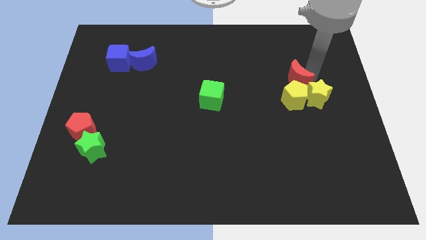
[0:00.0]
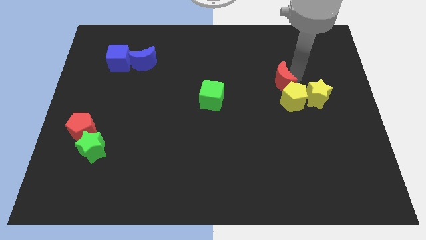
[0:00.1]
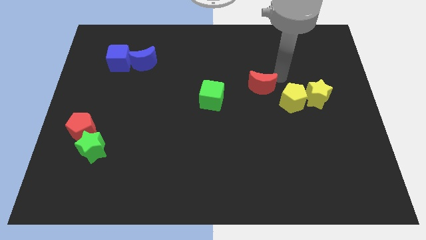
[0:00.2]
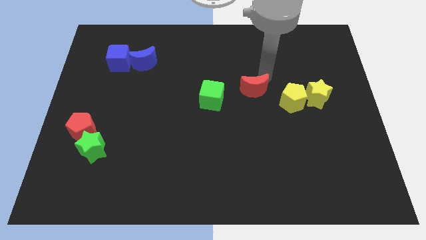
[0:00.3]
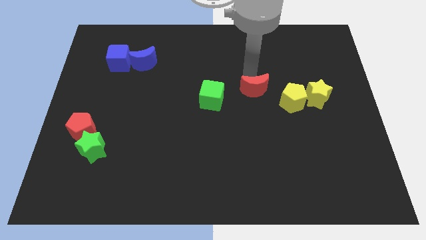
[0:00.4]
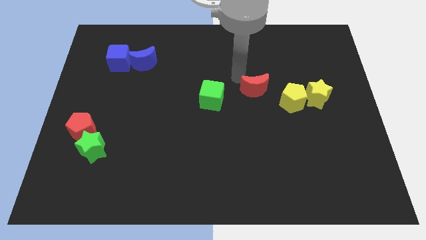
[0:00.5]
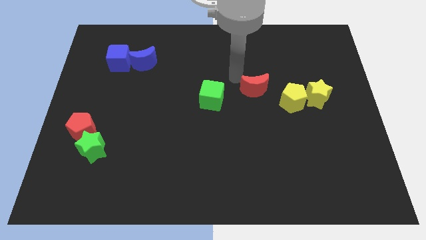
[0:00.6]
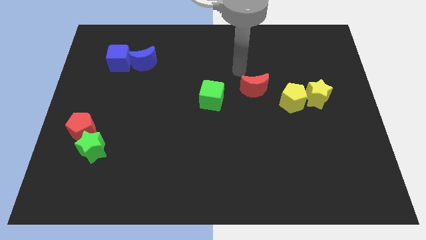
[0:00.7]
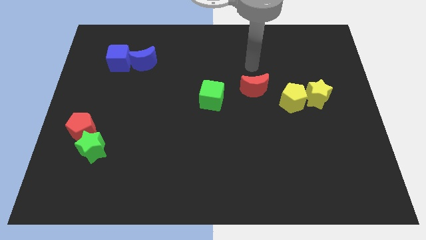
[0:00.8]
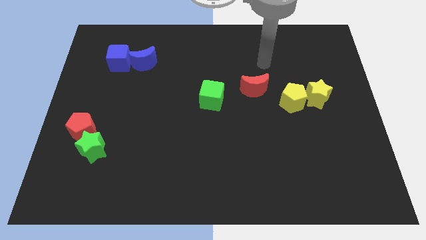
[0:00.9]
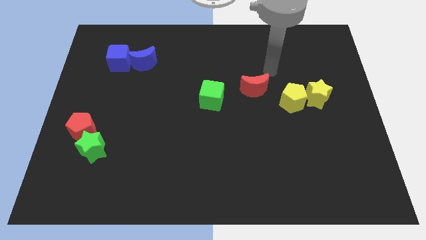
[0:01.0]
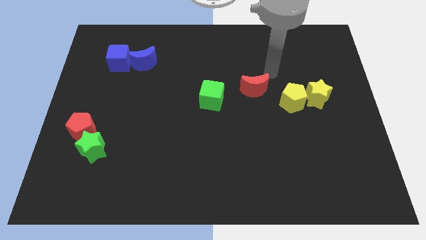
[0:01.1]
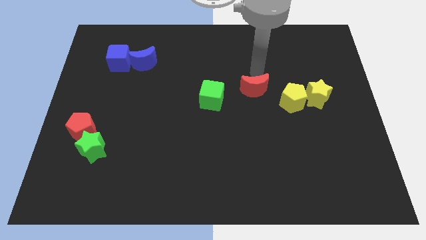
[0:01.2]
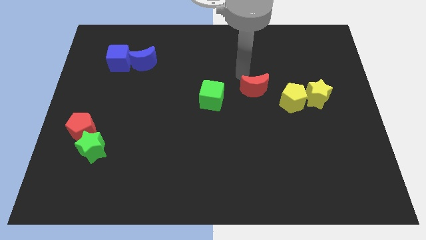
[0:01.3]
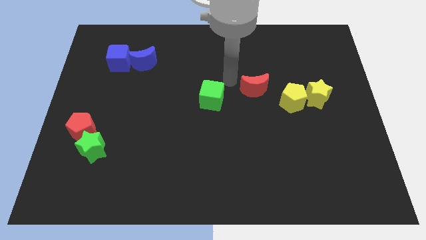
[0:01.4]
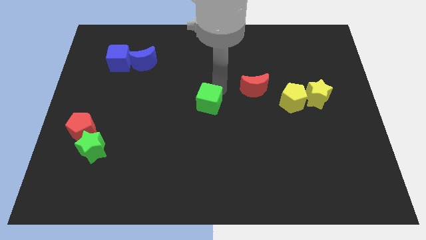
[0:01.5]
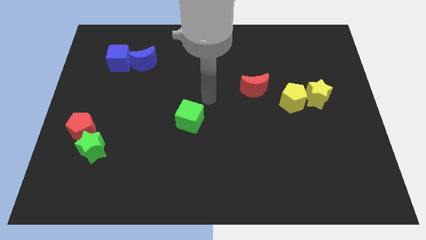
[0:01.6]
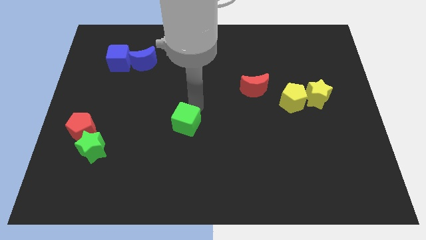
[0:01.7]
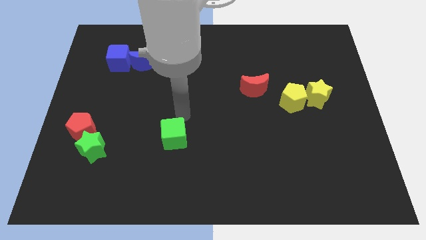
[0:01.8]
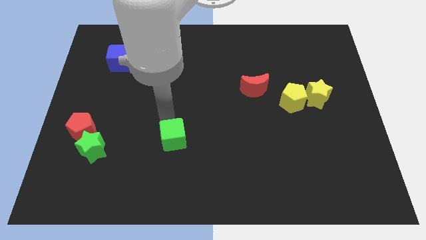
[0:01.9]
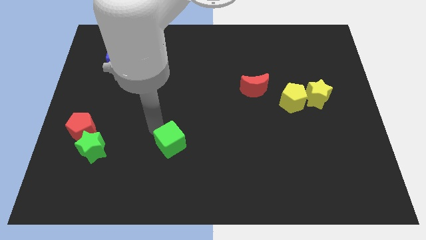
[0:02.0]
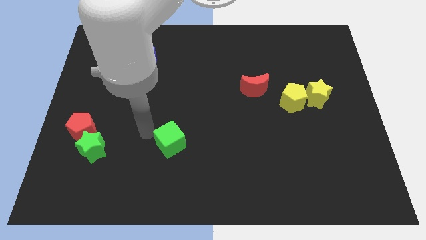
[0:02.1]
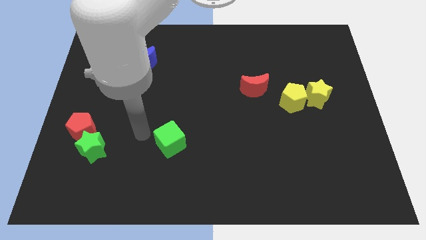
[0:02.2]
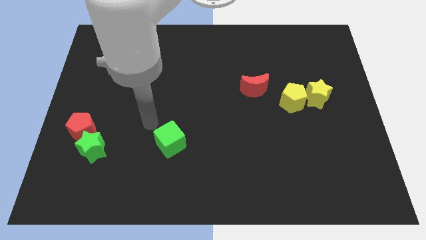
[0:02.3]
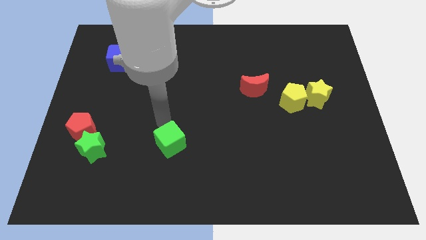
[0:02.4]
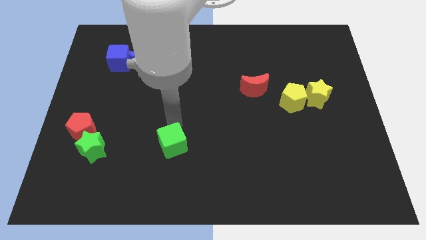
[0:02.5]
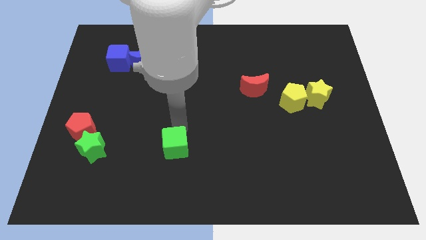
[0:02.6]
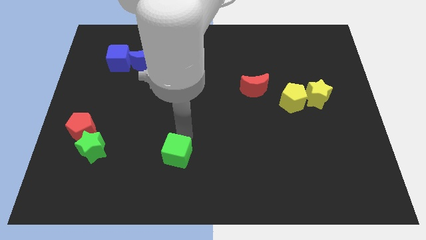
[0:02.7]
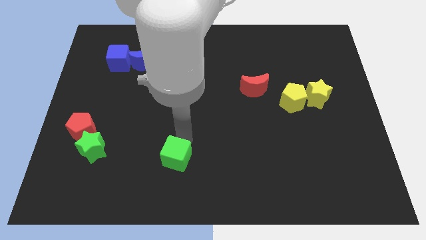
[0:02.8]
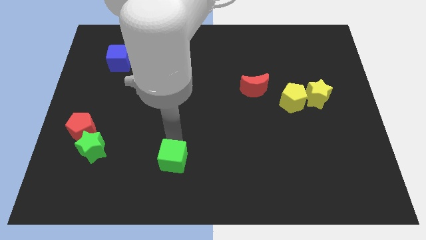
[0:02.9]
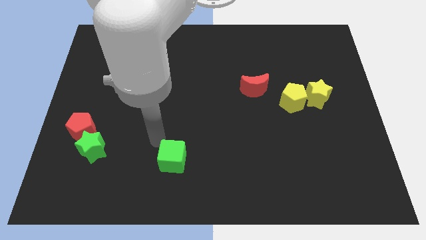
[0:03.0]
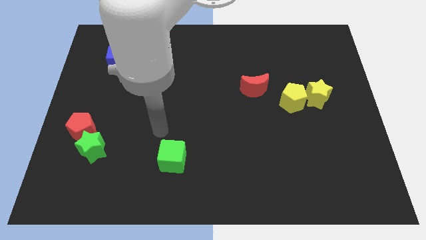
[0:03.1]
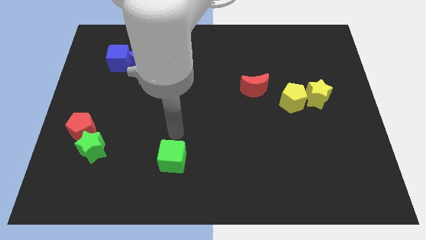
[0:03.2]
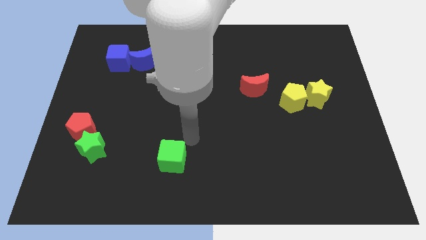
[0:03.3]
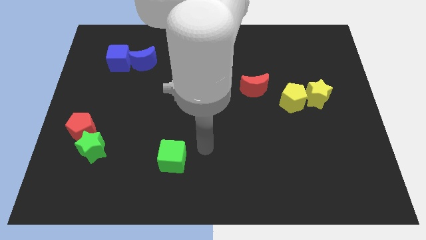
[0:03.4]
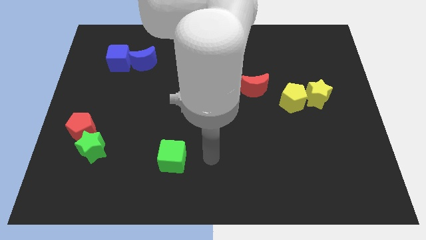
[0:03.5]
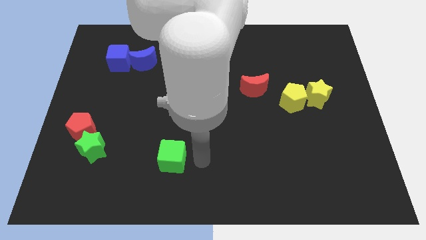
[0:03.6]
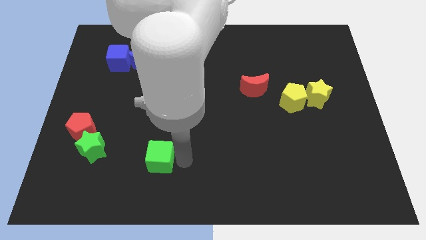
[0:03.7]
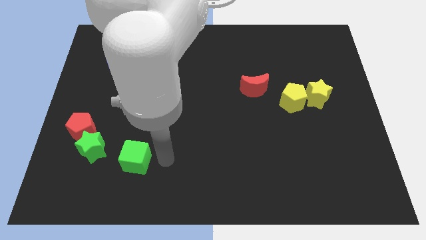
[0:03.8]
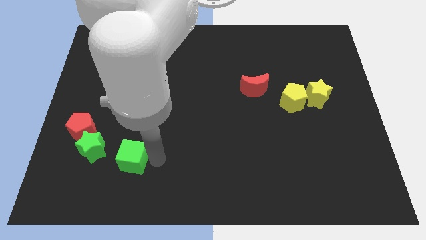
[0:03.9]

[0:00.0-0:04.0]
drag green cube beside green star

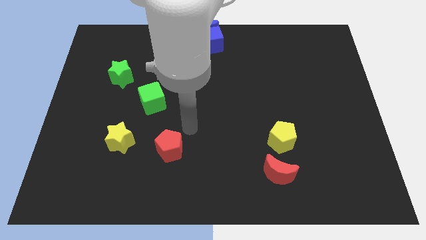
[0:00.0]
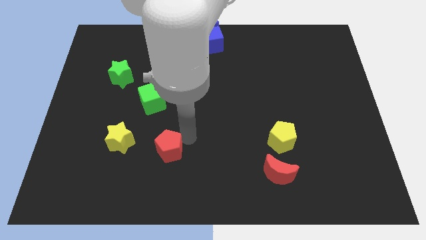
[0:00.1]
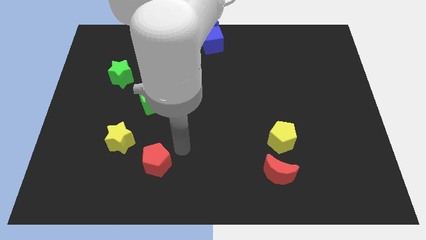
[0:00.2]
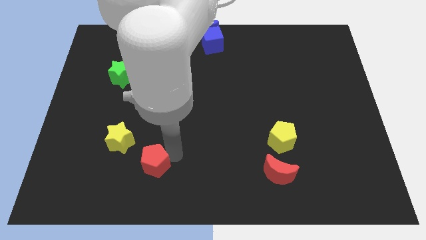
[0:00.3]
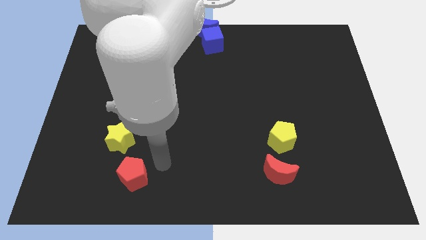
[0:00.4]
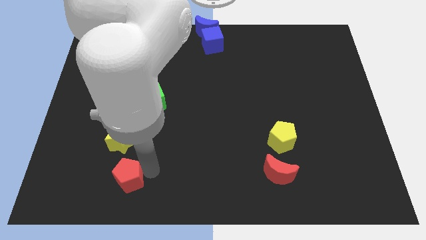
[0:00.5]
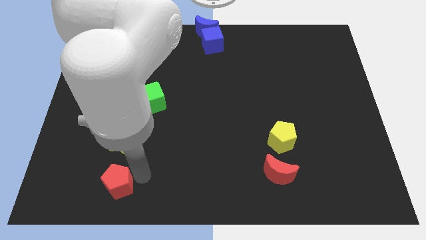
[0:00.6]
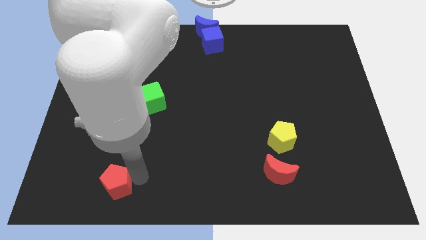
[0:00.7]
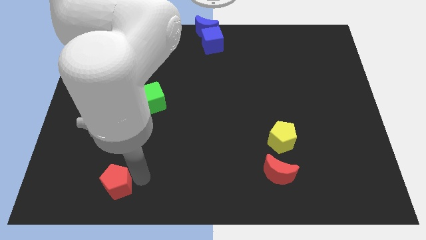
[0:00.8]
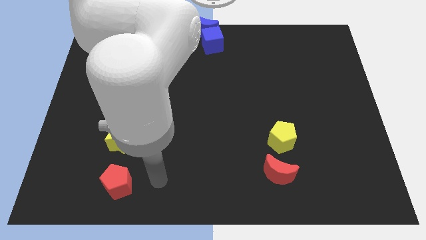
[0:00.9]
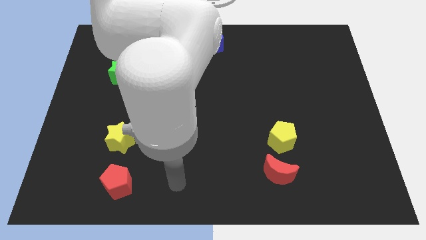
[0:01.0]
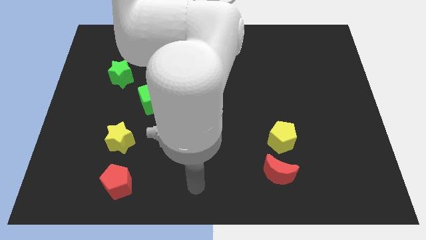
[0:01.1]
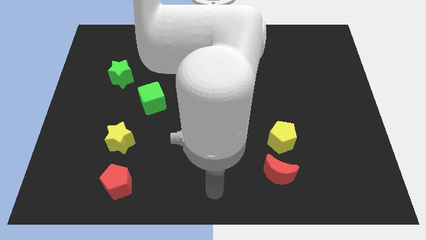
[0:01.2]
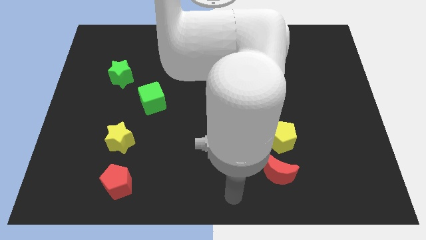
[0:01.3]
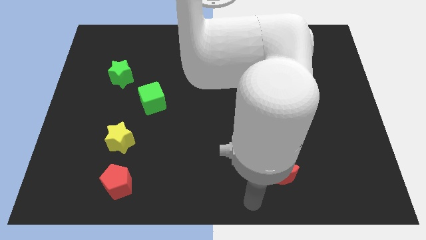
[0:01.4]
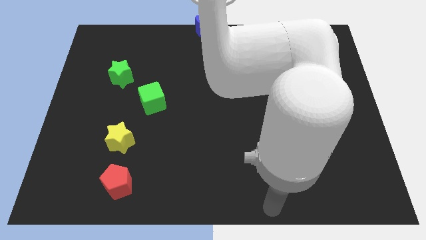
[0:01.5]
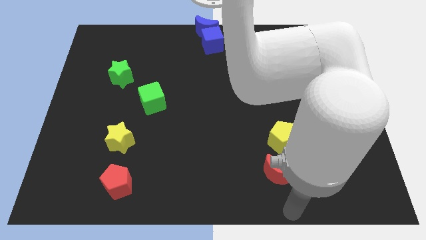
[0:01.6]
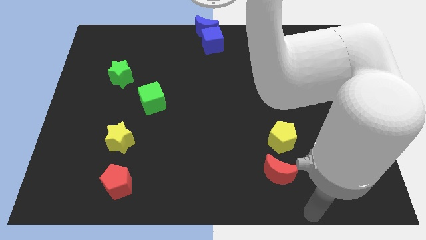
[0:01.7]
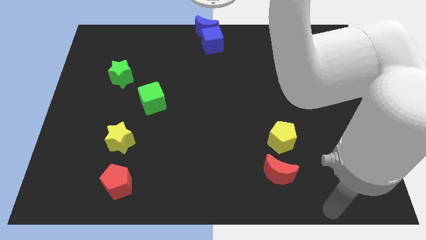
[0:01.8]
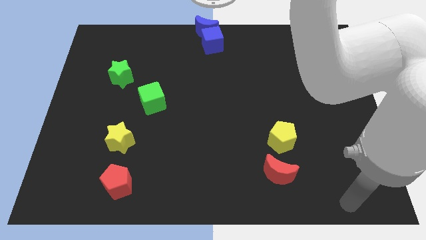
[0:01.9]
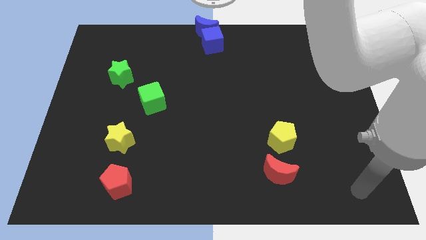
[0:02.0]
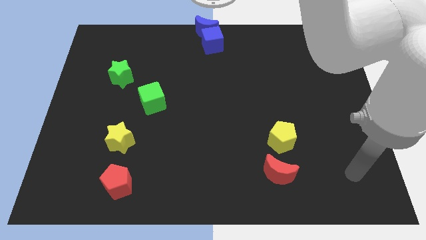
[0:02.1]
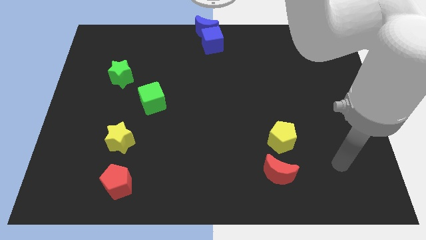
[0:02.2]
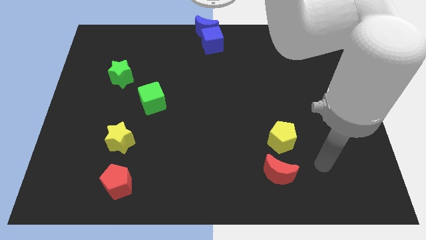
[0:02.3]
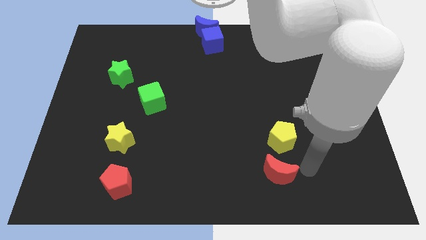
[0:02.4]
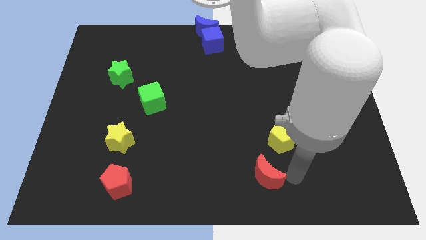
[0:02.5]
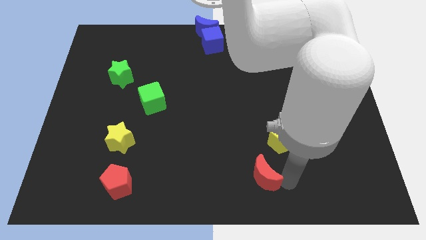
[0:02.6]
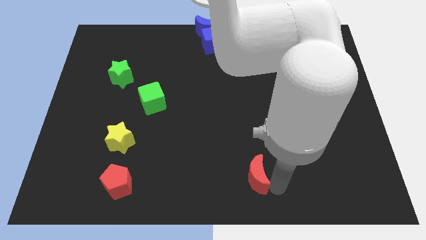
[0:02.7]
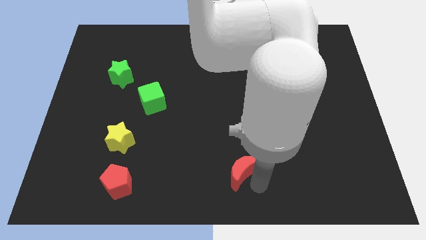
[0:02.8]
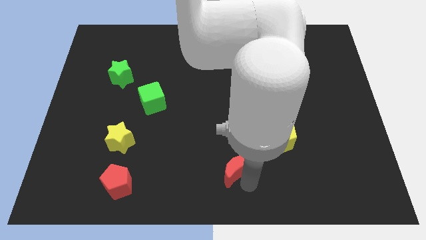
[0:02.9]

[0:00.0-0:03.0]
move red crescent towards the bottom center

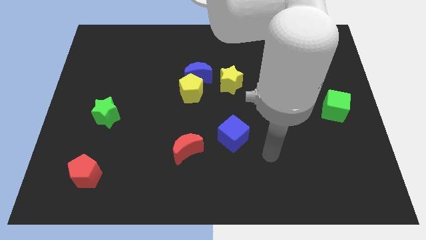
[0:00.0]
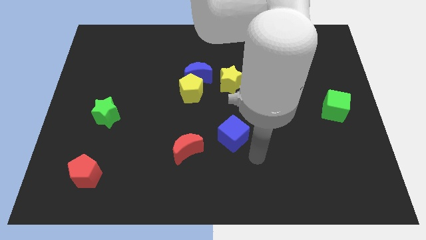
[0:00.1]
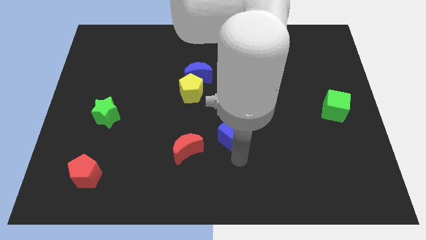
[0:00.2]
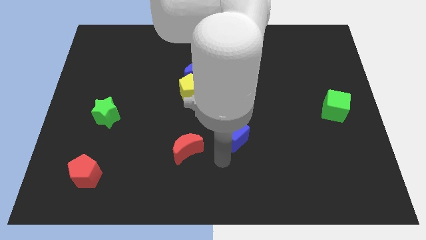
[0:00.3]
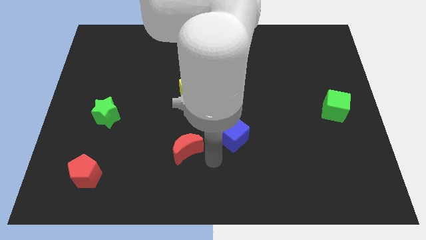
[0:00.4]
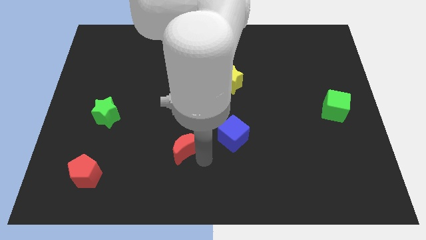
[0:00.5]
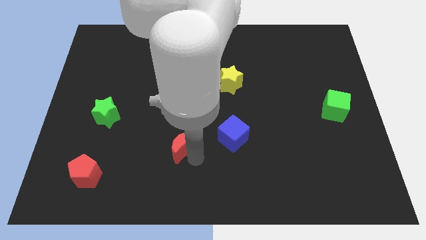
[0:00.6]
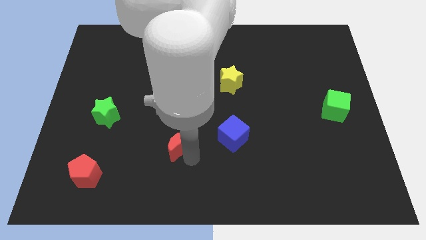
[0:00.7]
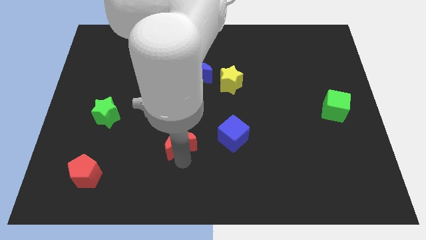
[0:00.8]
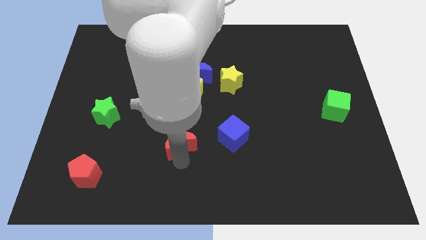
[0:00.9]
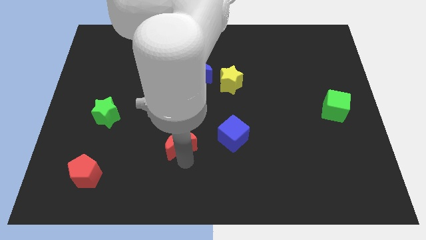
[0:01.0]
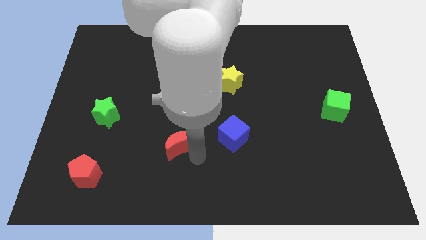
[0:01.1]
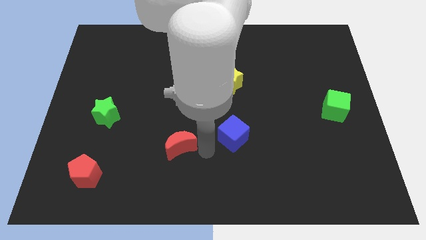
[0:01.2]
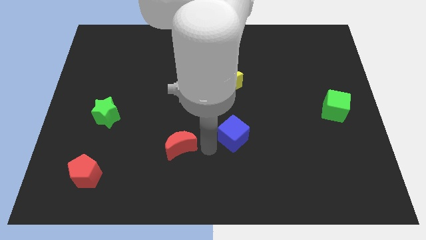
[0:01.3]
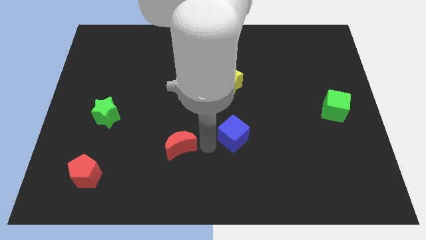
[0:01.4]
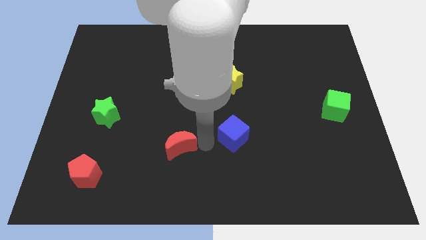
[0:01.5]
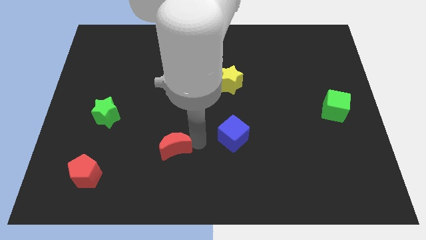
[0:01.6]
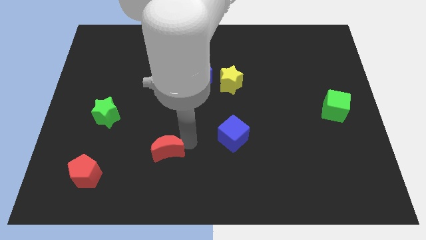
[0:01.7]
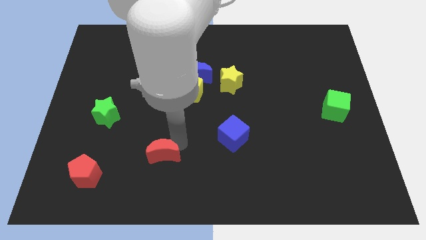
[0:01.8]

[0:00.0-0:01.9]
push the red moon between blue cube and red pentagon
